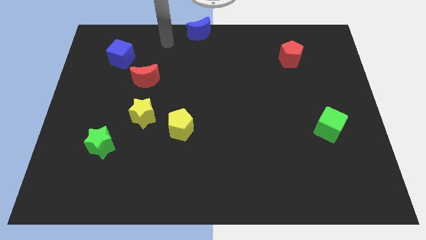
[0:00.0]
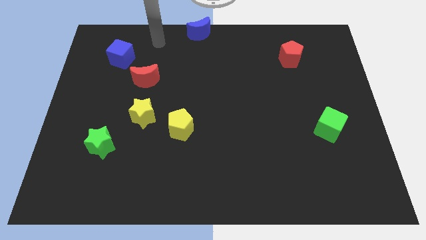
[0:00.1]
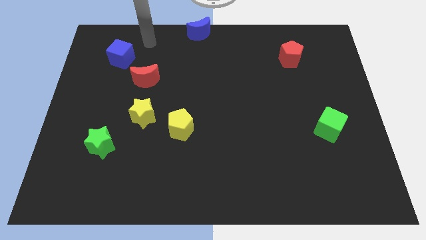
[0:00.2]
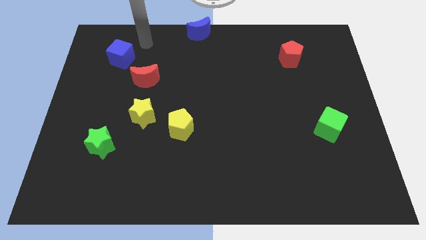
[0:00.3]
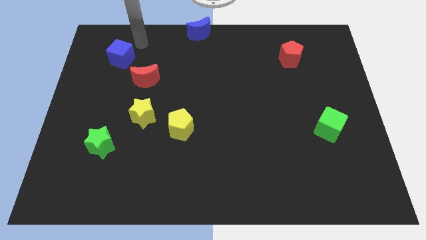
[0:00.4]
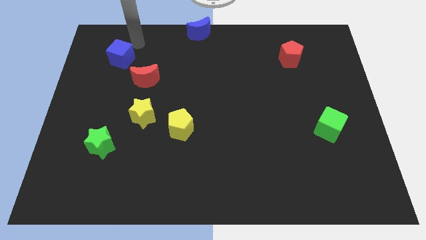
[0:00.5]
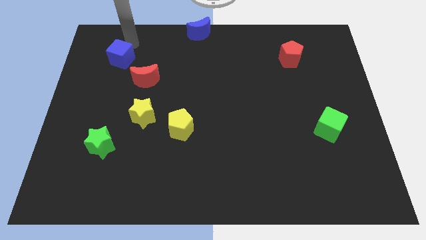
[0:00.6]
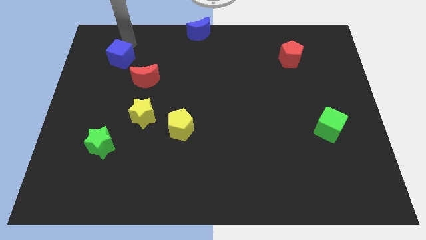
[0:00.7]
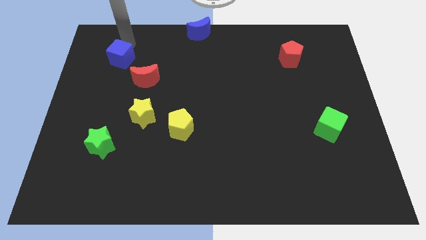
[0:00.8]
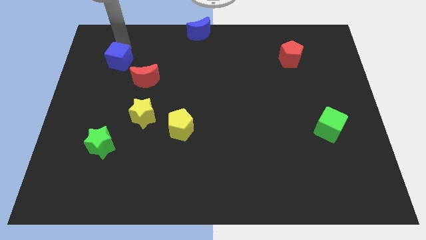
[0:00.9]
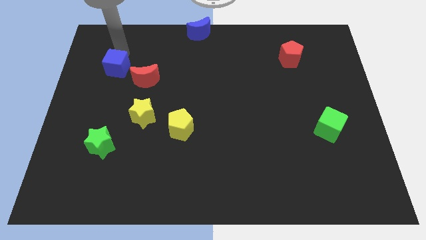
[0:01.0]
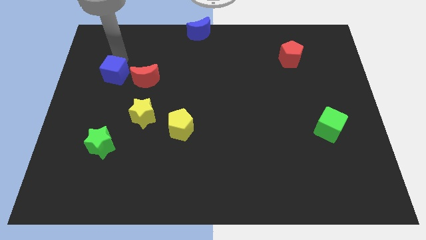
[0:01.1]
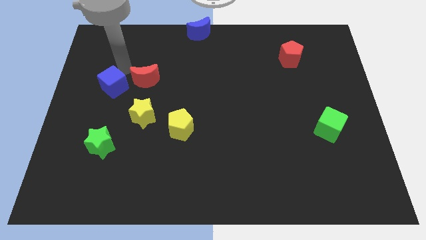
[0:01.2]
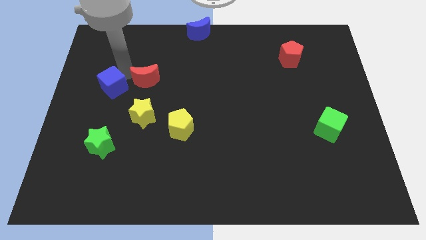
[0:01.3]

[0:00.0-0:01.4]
place blue cube to the left of red moon

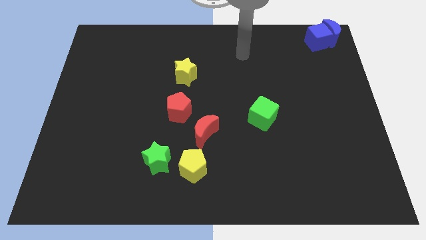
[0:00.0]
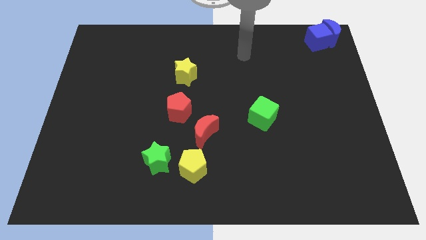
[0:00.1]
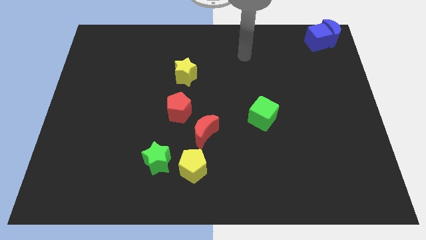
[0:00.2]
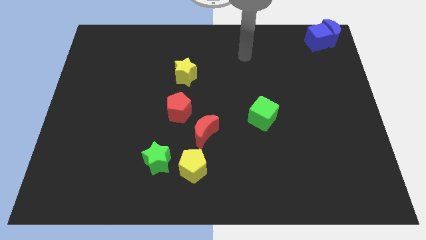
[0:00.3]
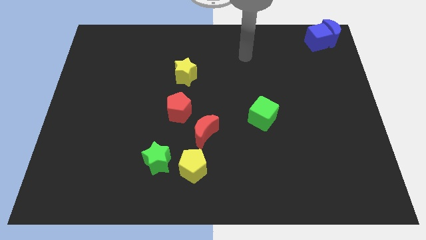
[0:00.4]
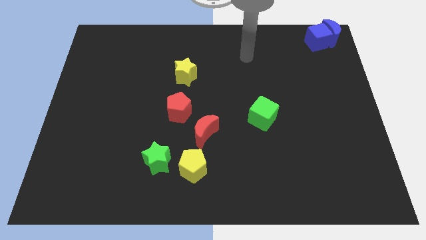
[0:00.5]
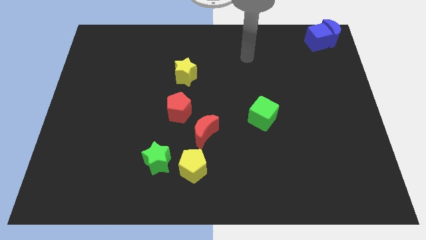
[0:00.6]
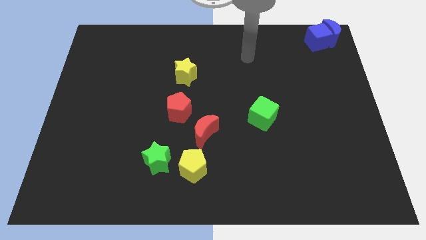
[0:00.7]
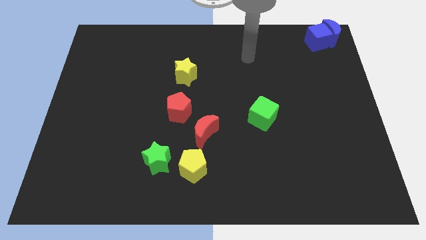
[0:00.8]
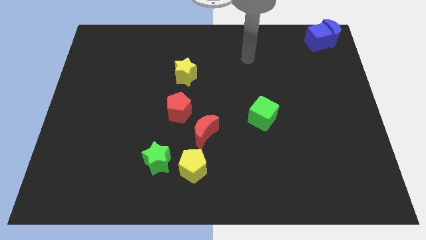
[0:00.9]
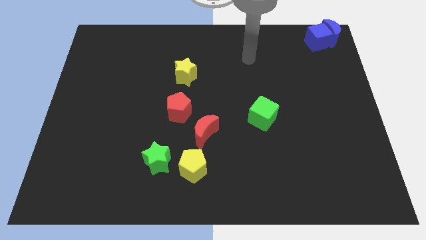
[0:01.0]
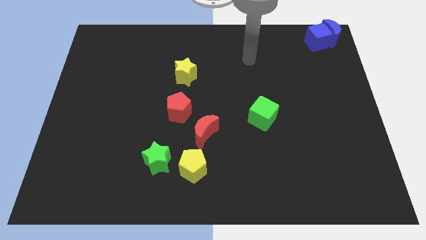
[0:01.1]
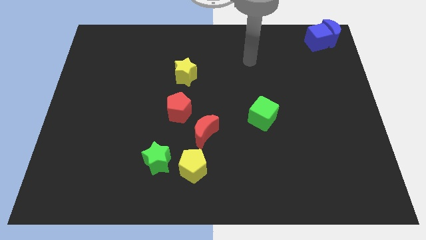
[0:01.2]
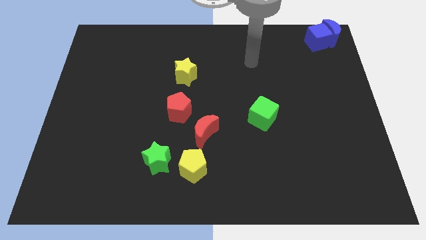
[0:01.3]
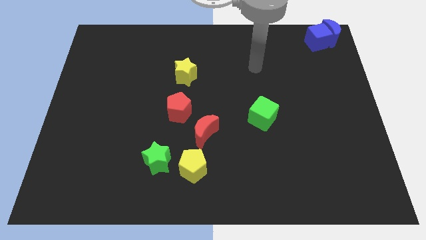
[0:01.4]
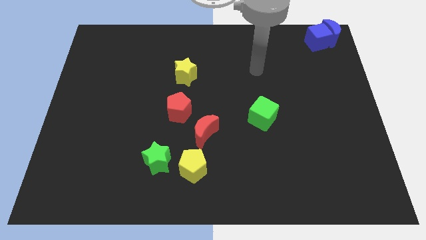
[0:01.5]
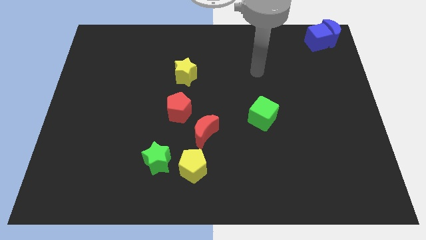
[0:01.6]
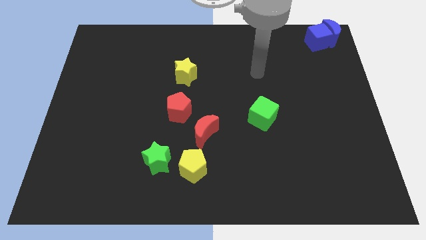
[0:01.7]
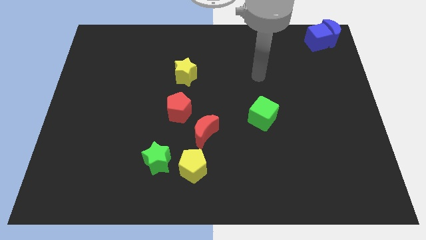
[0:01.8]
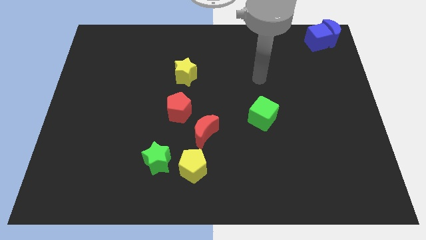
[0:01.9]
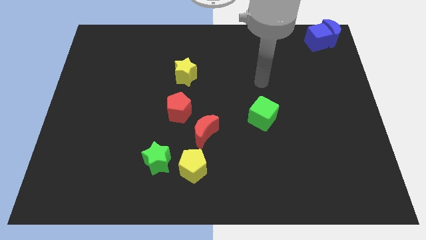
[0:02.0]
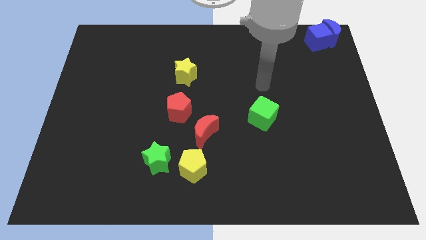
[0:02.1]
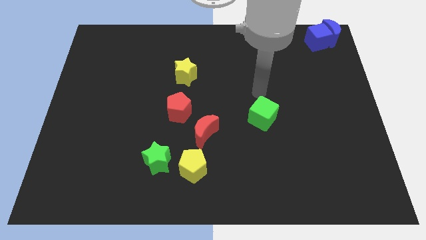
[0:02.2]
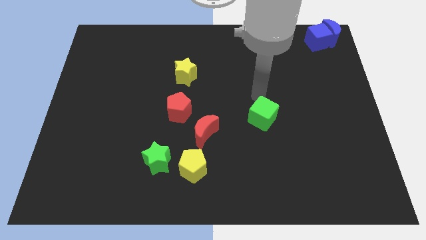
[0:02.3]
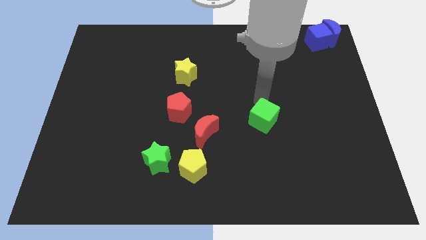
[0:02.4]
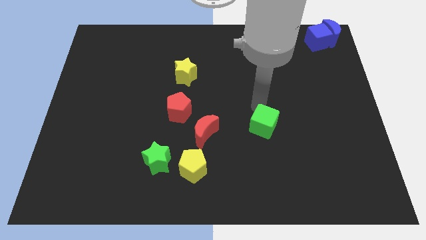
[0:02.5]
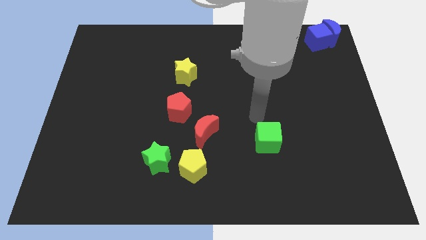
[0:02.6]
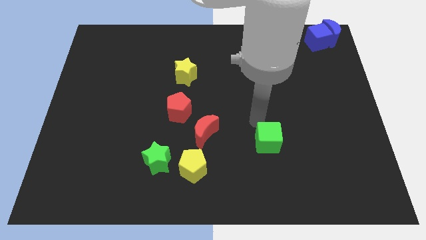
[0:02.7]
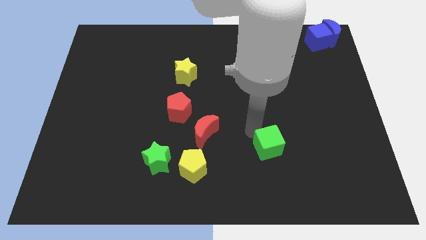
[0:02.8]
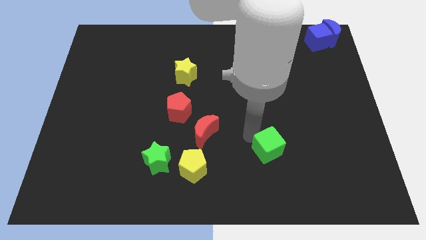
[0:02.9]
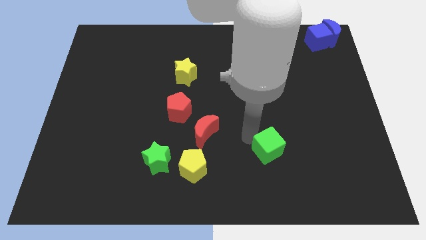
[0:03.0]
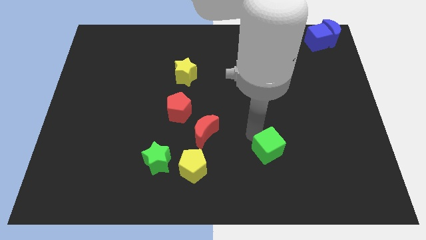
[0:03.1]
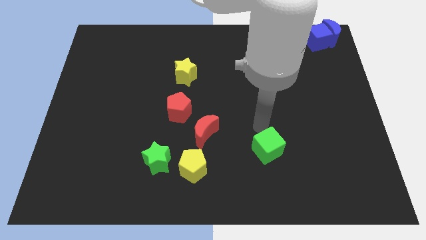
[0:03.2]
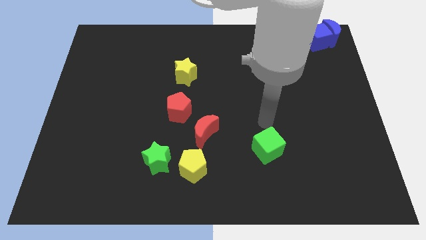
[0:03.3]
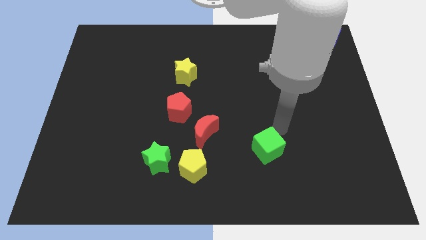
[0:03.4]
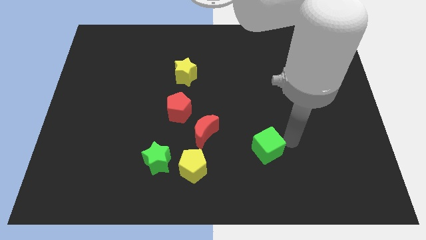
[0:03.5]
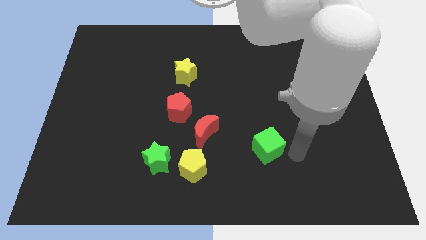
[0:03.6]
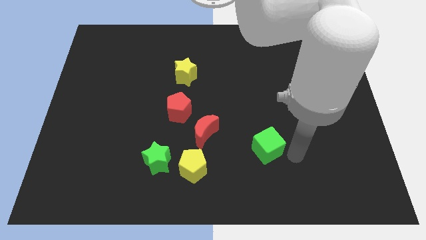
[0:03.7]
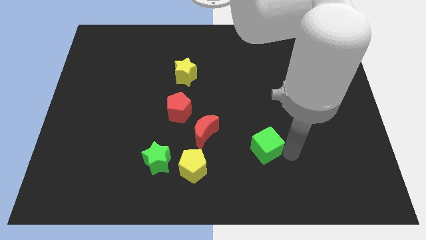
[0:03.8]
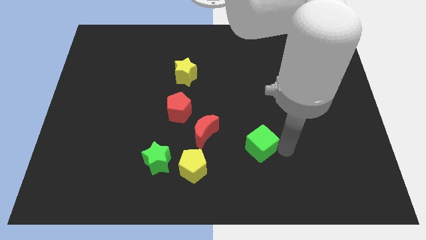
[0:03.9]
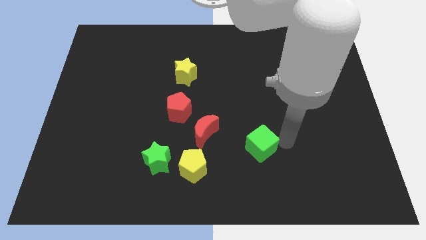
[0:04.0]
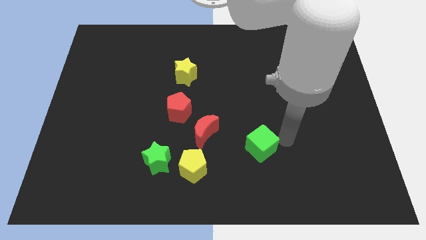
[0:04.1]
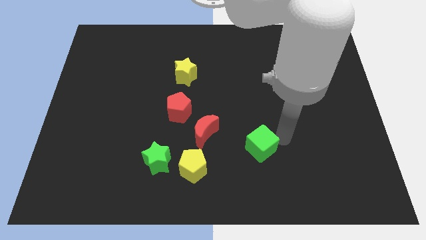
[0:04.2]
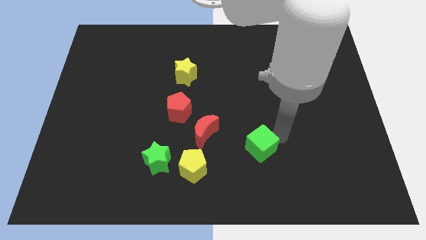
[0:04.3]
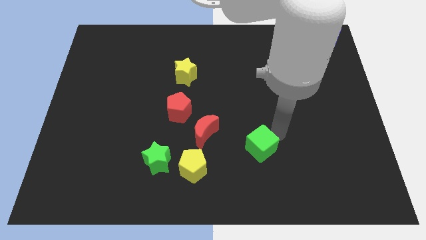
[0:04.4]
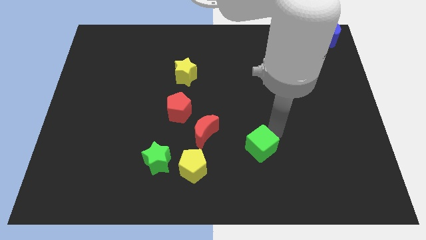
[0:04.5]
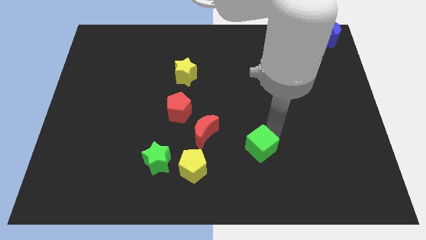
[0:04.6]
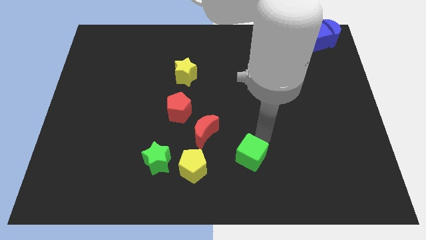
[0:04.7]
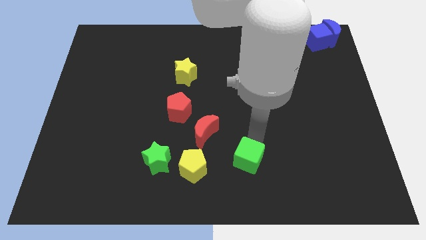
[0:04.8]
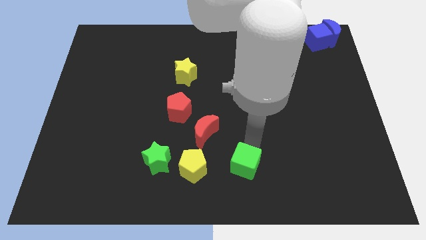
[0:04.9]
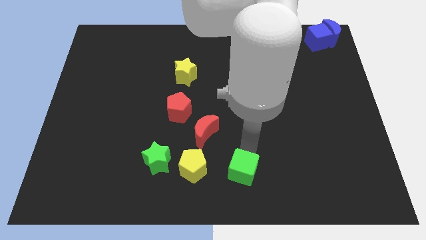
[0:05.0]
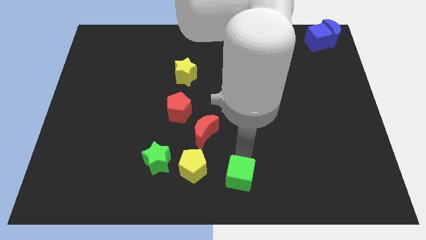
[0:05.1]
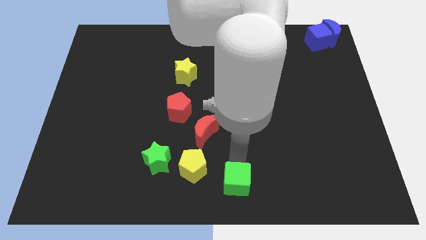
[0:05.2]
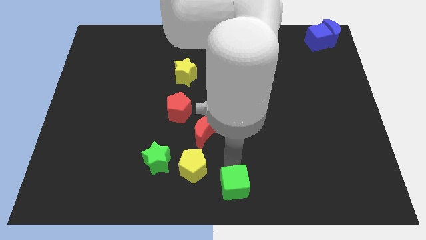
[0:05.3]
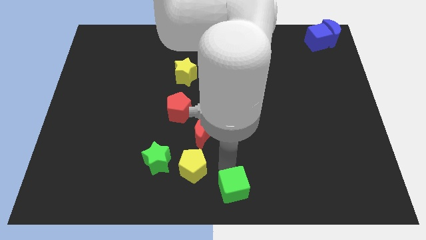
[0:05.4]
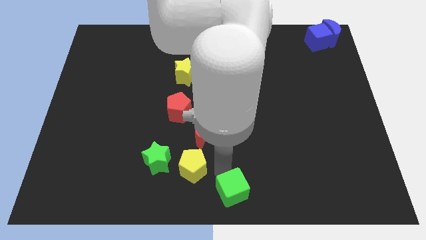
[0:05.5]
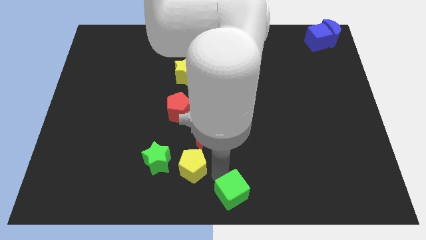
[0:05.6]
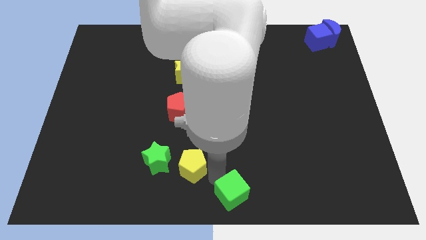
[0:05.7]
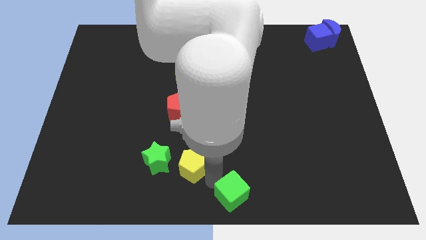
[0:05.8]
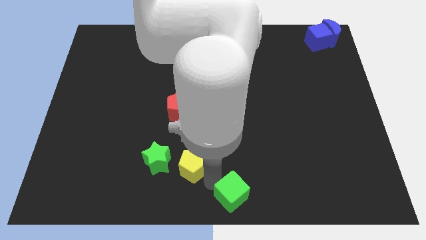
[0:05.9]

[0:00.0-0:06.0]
slide the green cube to the bottom center of the board

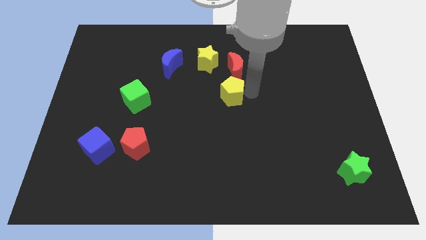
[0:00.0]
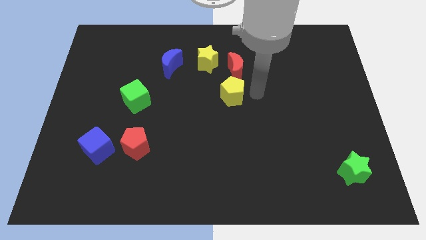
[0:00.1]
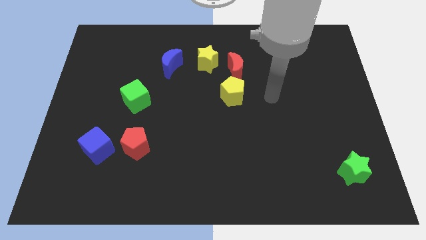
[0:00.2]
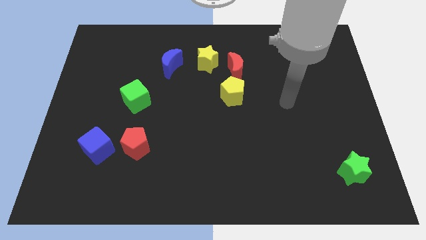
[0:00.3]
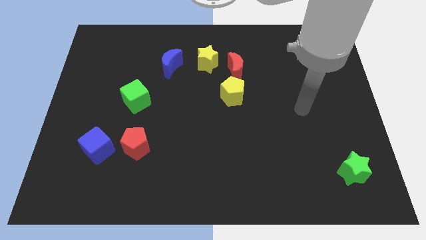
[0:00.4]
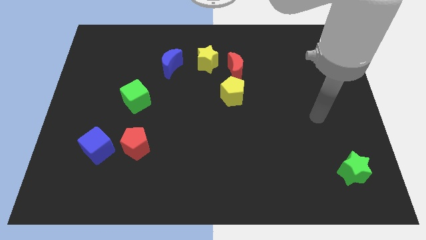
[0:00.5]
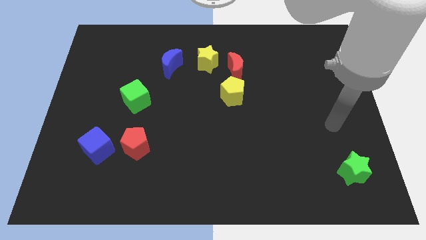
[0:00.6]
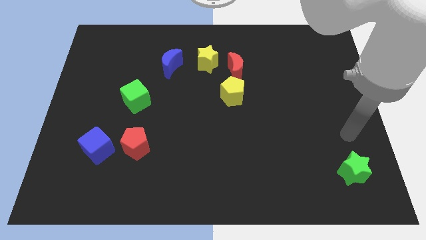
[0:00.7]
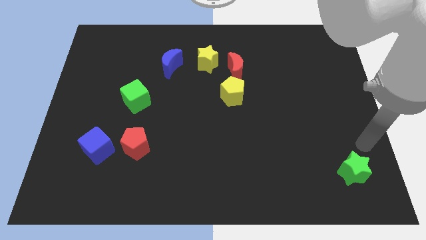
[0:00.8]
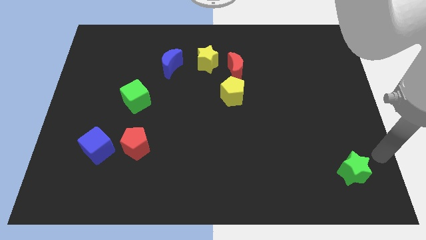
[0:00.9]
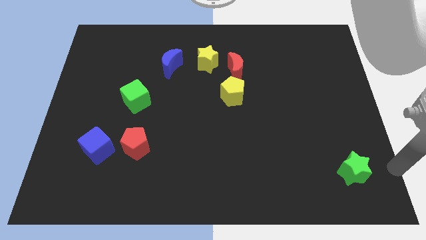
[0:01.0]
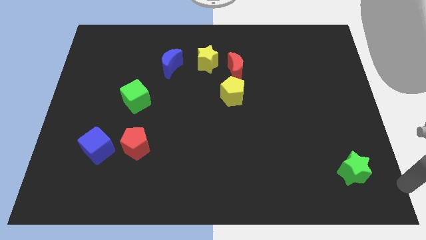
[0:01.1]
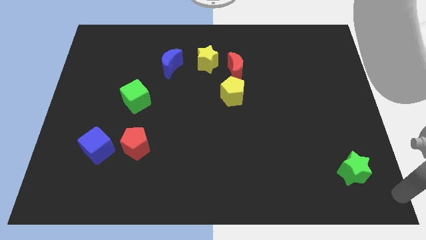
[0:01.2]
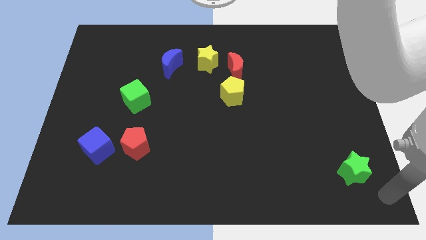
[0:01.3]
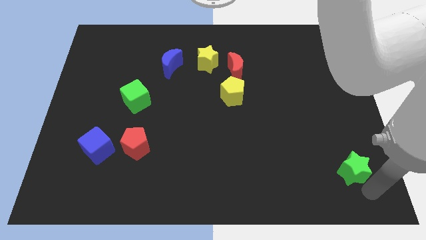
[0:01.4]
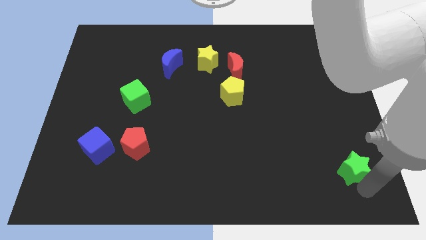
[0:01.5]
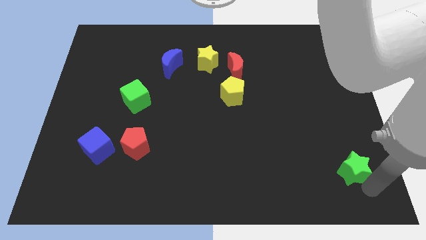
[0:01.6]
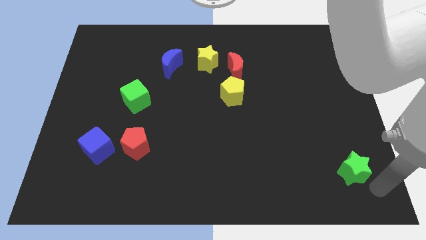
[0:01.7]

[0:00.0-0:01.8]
point your hand below the green star
